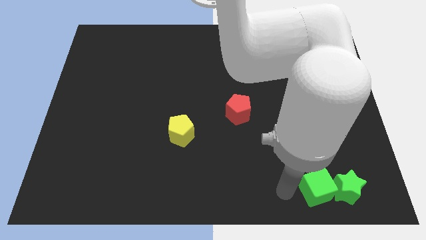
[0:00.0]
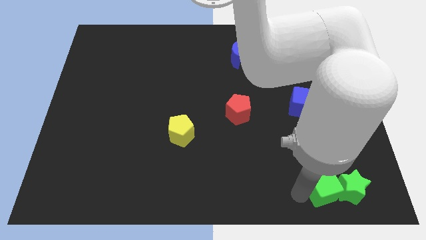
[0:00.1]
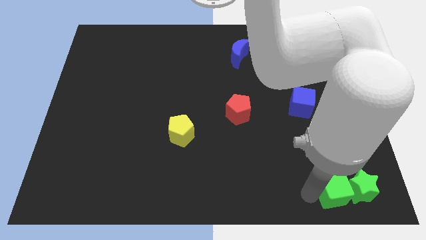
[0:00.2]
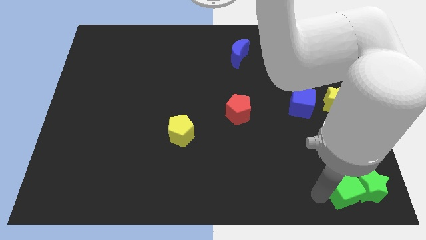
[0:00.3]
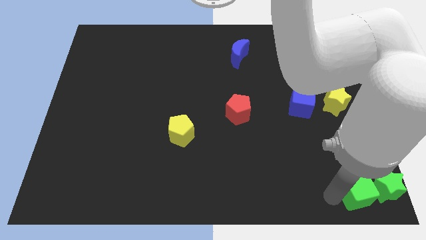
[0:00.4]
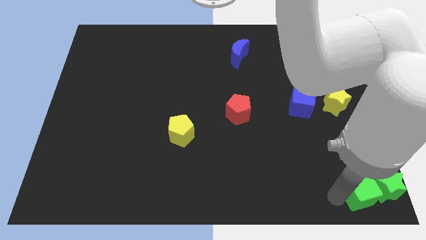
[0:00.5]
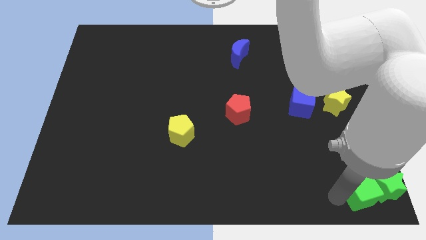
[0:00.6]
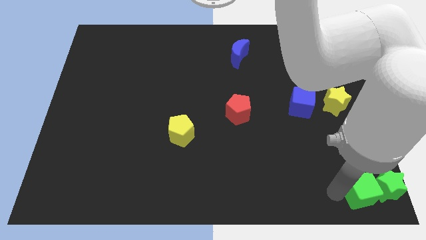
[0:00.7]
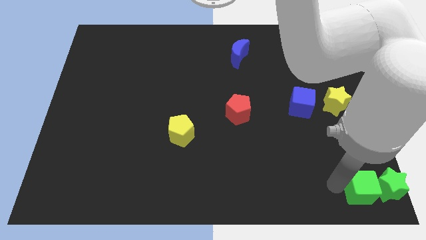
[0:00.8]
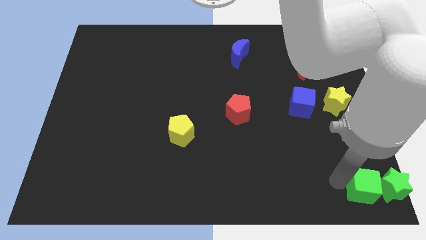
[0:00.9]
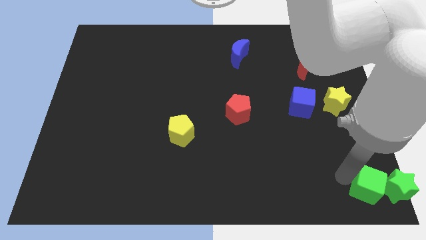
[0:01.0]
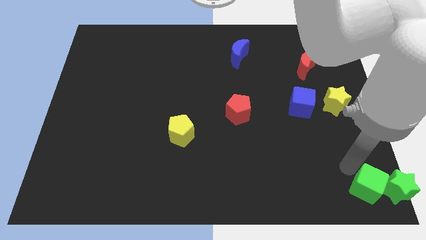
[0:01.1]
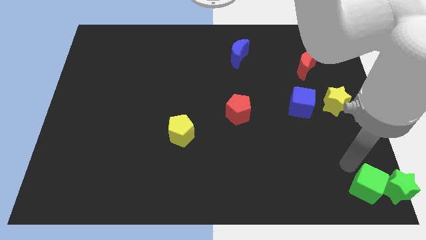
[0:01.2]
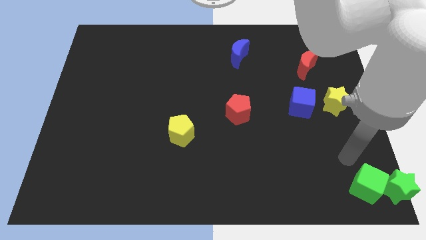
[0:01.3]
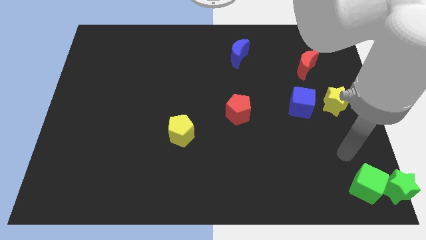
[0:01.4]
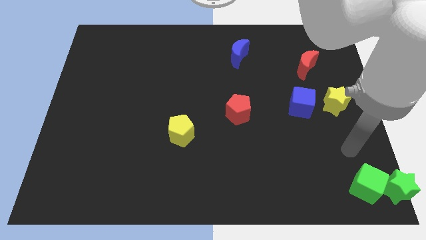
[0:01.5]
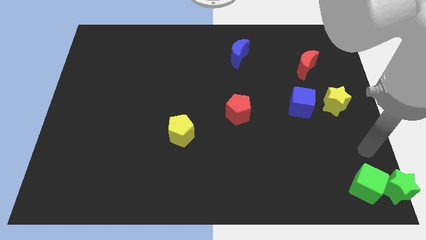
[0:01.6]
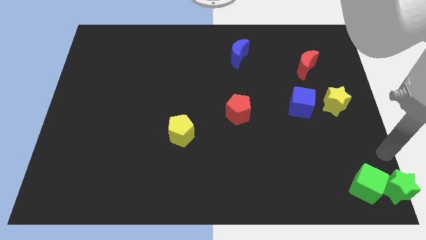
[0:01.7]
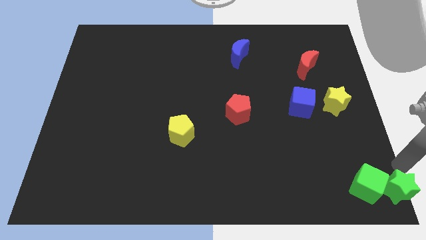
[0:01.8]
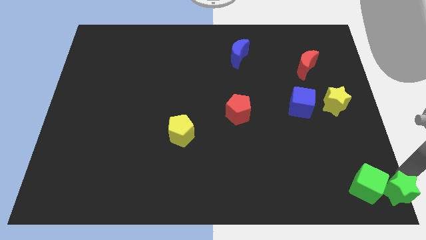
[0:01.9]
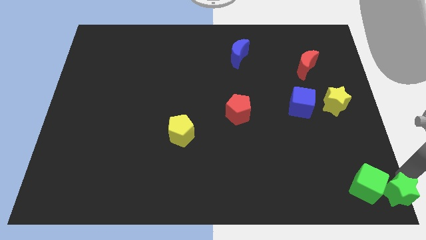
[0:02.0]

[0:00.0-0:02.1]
place the green blocks at bottom right corner of the board

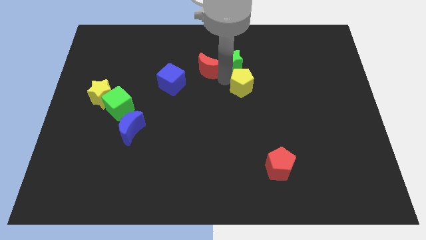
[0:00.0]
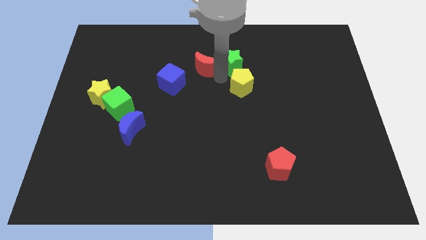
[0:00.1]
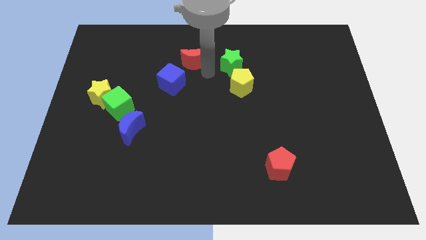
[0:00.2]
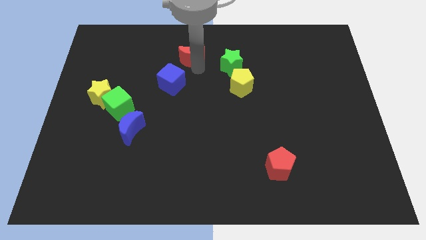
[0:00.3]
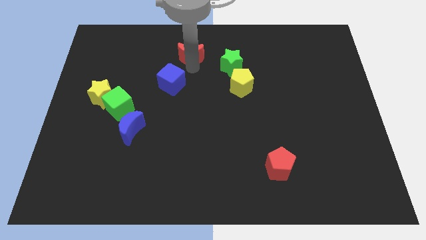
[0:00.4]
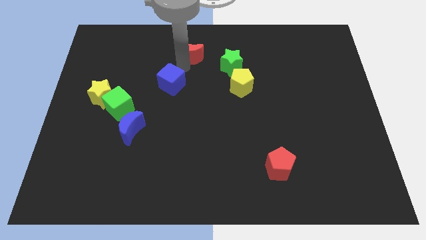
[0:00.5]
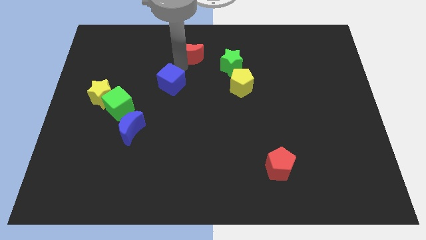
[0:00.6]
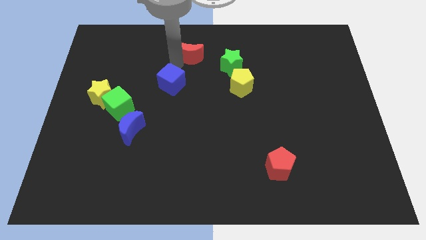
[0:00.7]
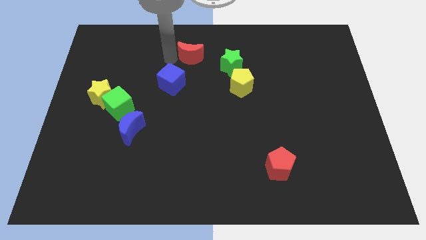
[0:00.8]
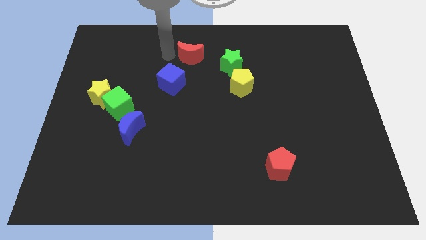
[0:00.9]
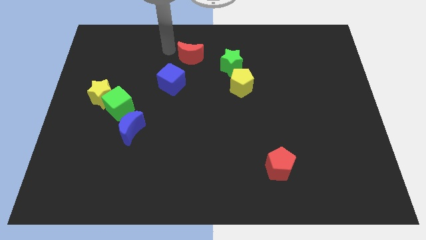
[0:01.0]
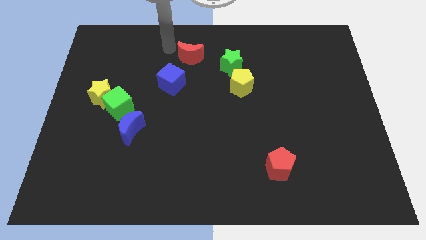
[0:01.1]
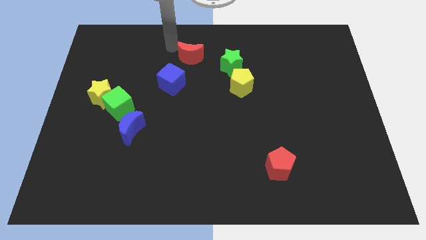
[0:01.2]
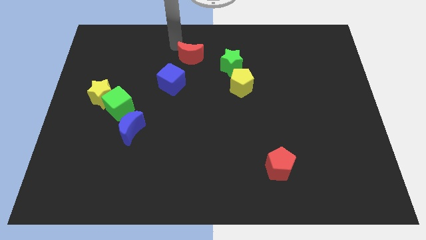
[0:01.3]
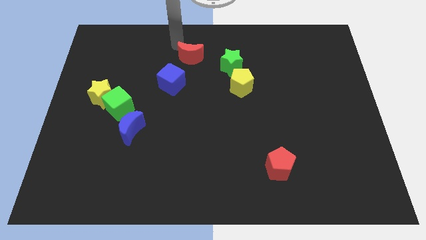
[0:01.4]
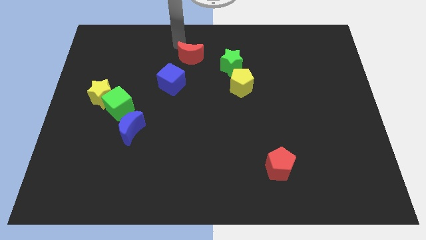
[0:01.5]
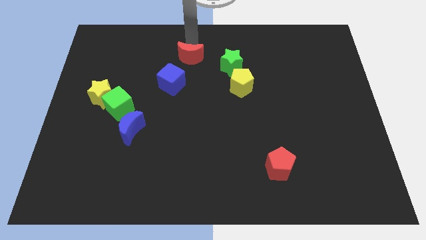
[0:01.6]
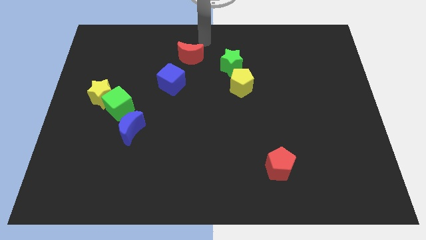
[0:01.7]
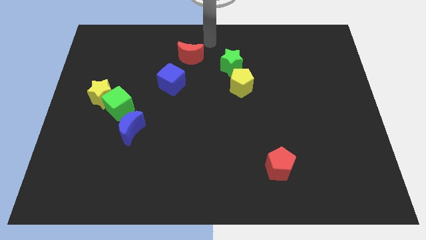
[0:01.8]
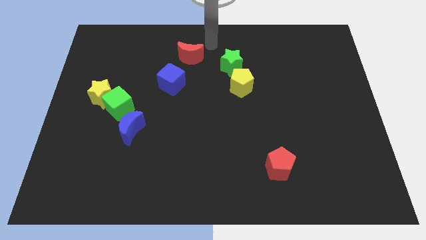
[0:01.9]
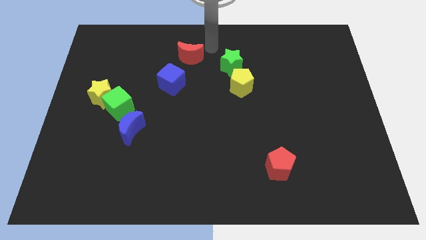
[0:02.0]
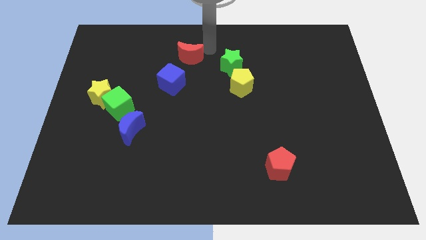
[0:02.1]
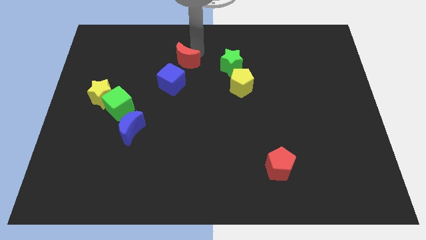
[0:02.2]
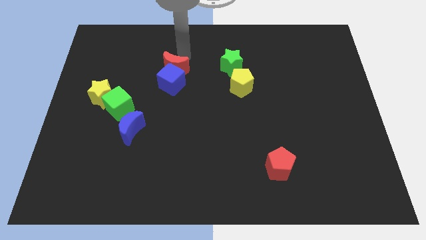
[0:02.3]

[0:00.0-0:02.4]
push the red crescent into the blue cube

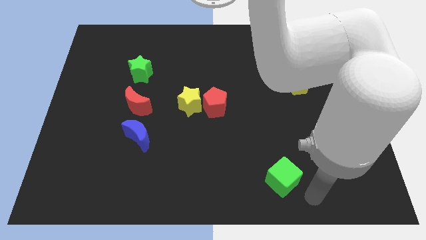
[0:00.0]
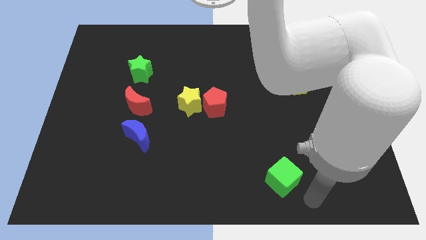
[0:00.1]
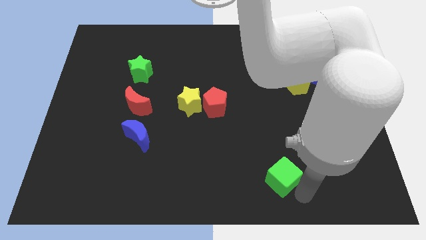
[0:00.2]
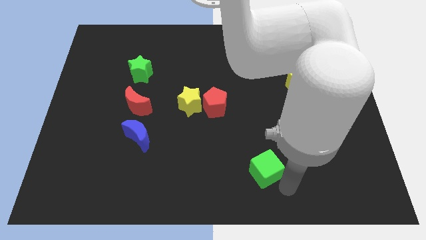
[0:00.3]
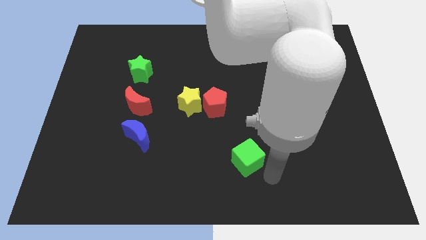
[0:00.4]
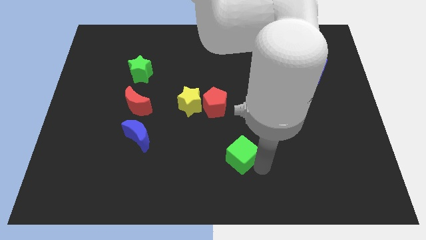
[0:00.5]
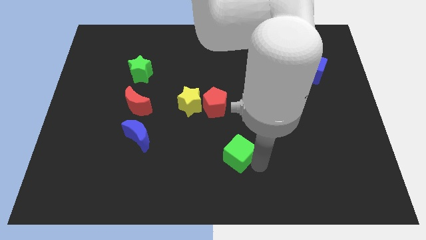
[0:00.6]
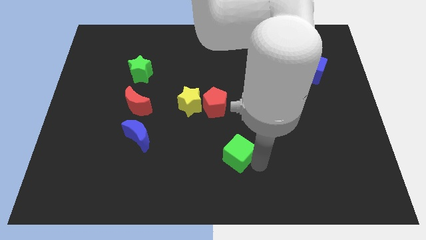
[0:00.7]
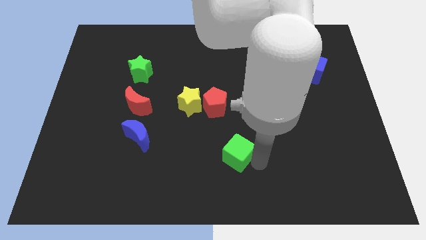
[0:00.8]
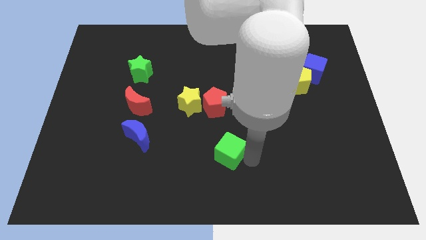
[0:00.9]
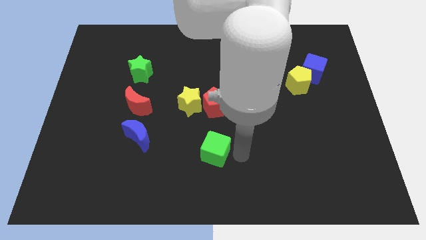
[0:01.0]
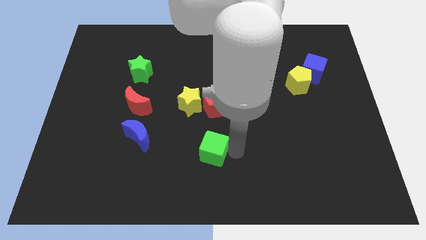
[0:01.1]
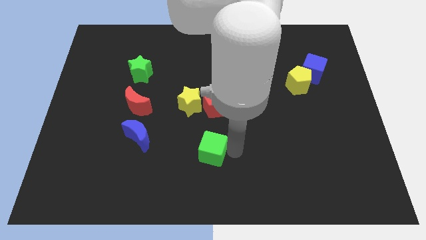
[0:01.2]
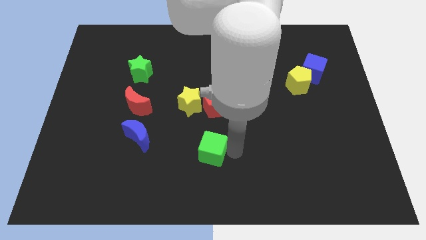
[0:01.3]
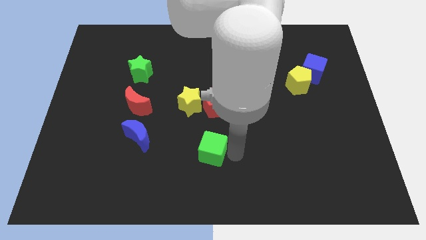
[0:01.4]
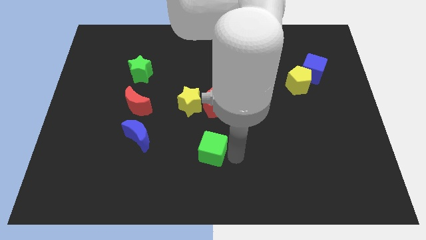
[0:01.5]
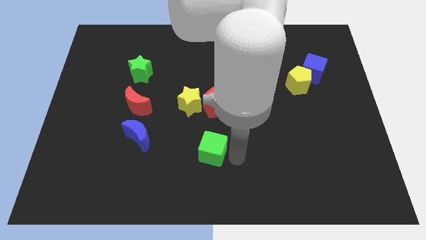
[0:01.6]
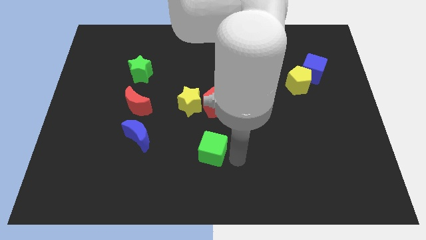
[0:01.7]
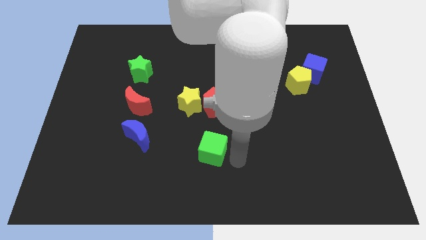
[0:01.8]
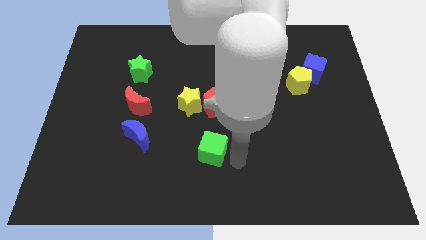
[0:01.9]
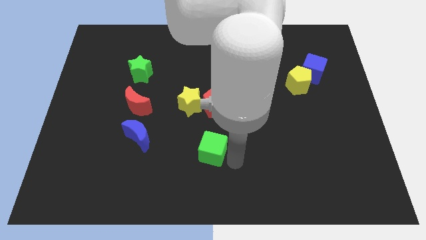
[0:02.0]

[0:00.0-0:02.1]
move the green cube below red pentagon

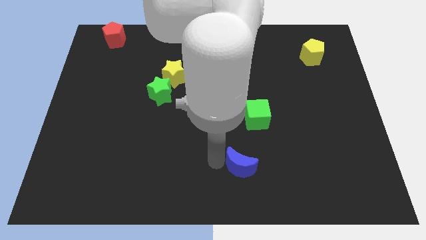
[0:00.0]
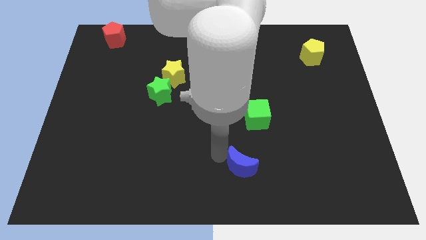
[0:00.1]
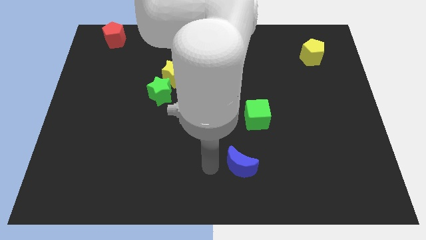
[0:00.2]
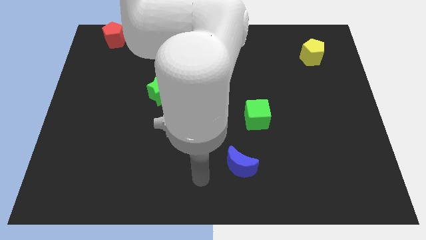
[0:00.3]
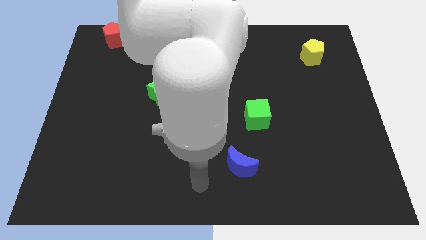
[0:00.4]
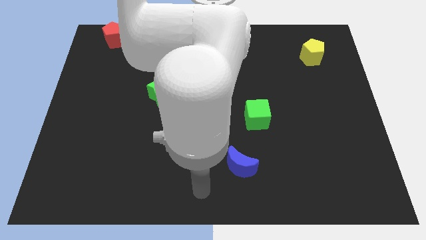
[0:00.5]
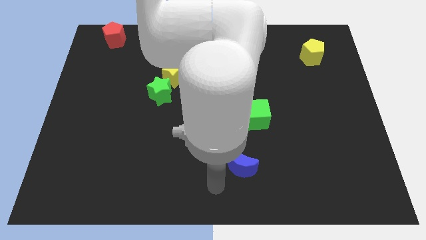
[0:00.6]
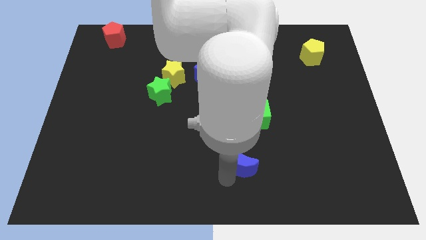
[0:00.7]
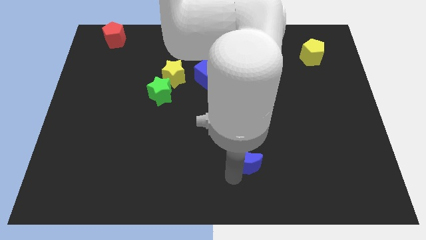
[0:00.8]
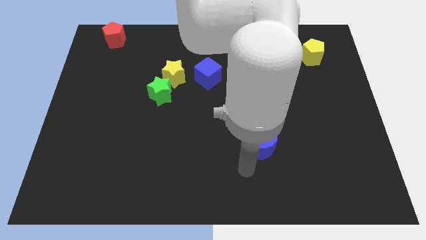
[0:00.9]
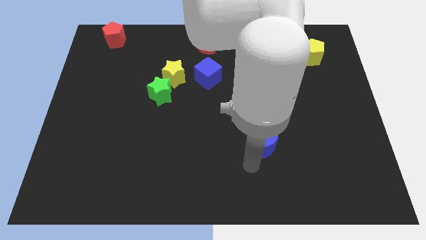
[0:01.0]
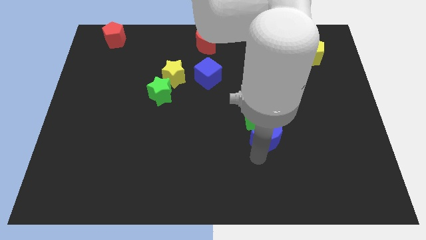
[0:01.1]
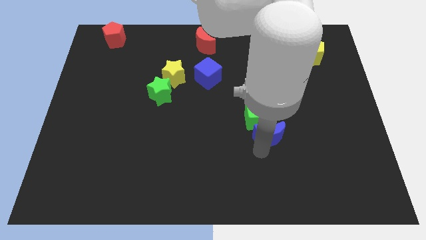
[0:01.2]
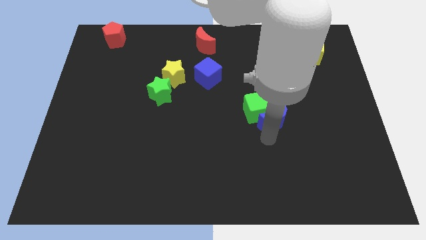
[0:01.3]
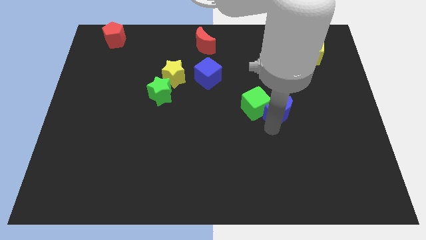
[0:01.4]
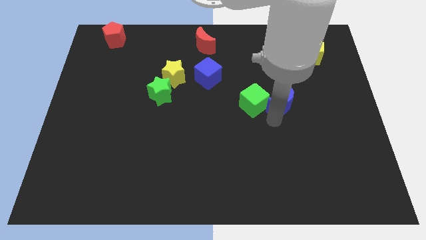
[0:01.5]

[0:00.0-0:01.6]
place the blue crescent into the green cube

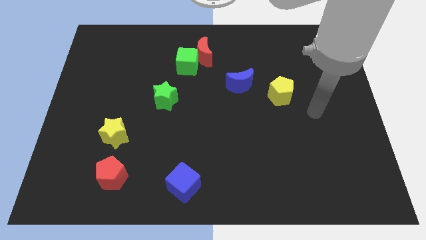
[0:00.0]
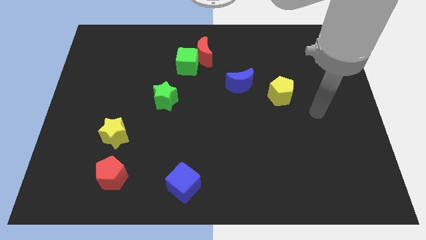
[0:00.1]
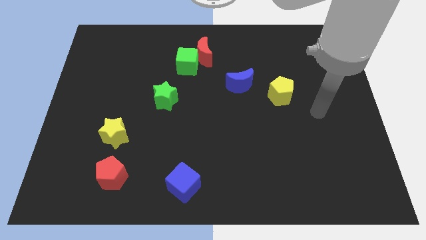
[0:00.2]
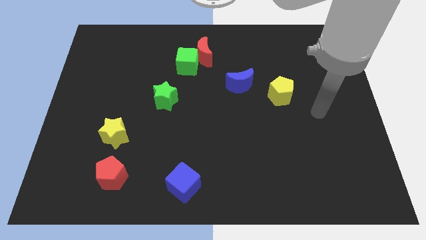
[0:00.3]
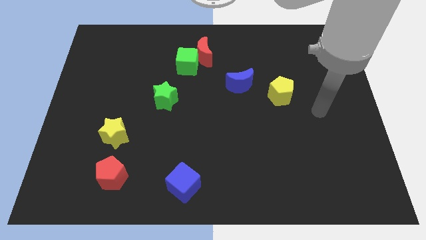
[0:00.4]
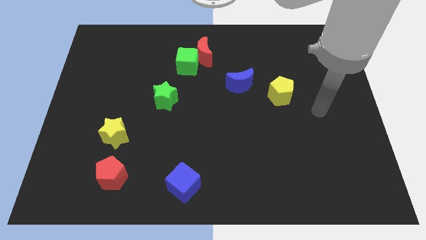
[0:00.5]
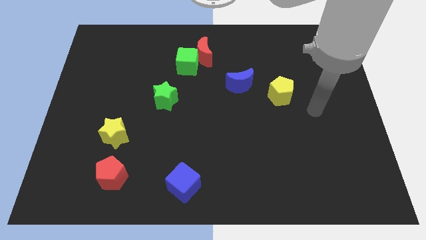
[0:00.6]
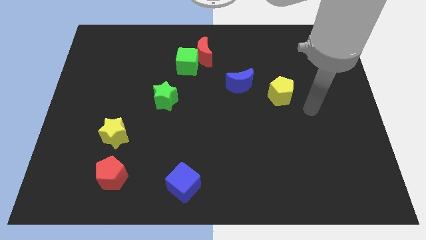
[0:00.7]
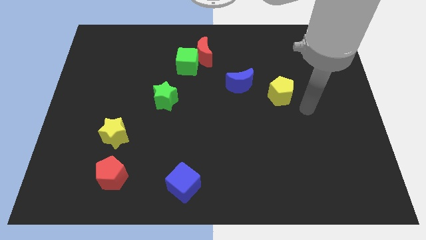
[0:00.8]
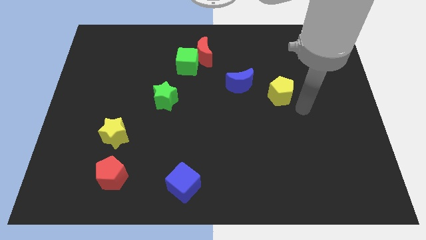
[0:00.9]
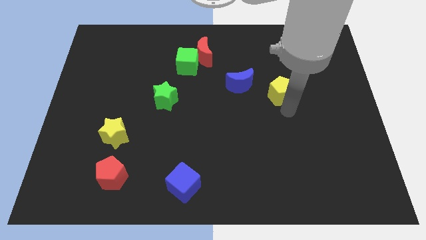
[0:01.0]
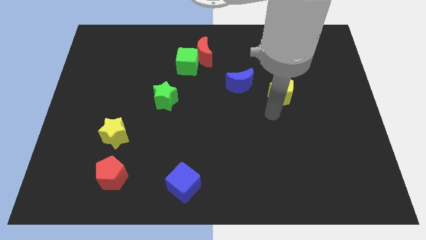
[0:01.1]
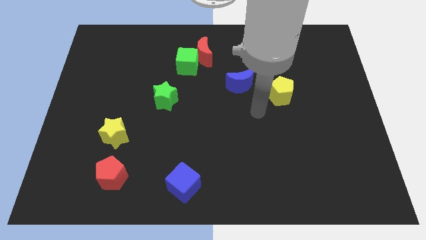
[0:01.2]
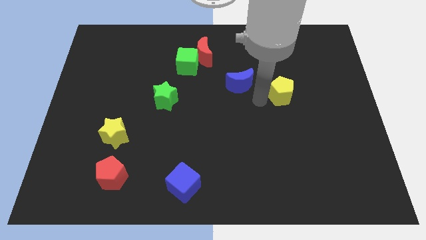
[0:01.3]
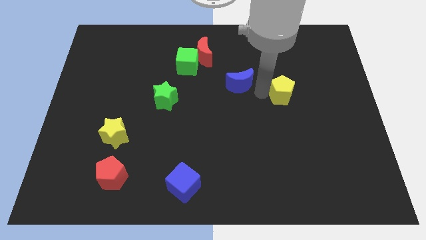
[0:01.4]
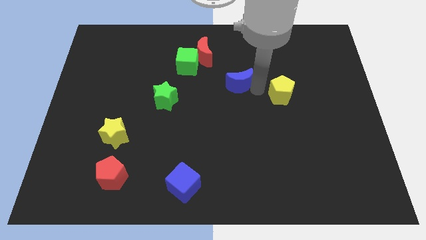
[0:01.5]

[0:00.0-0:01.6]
move your arm to the left of the yellow pentagon
